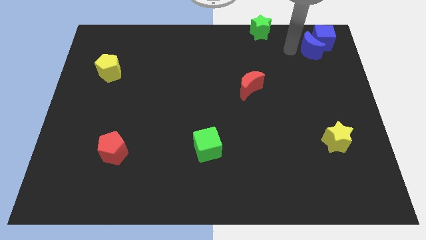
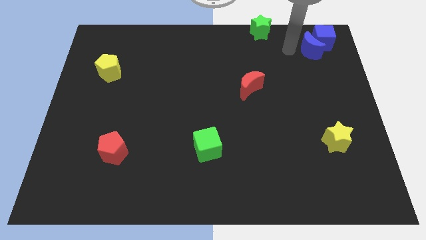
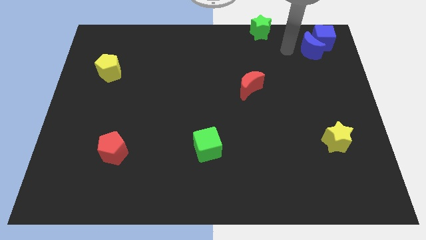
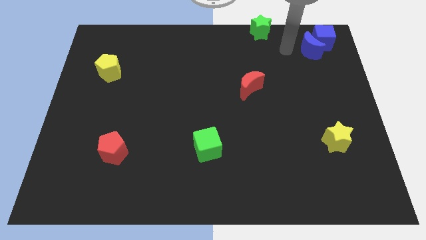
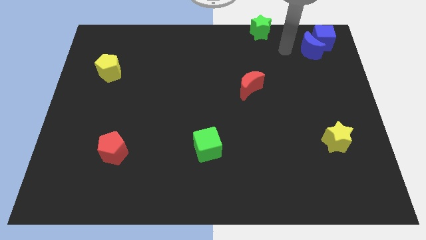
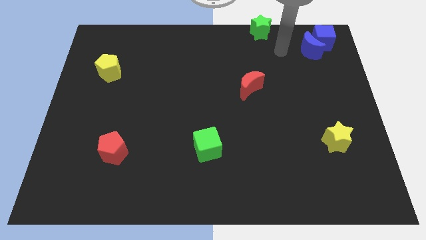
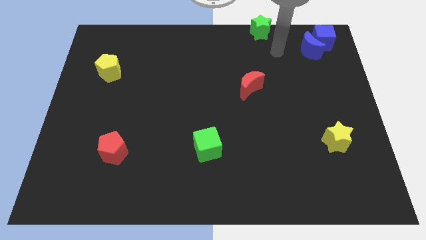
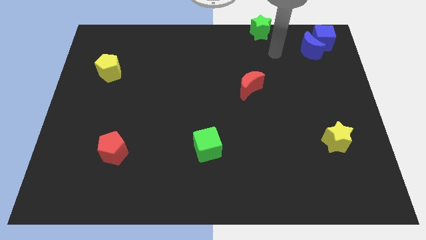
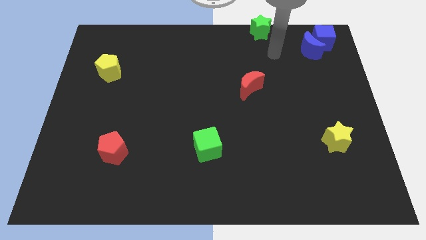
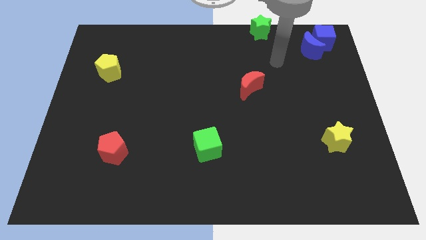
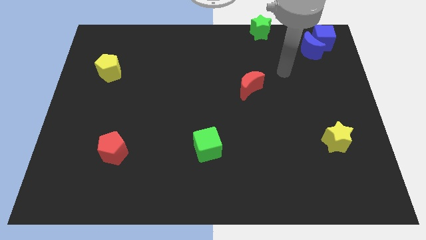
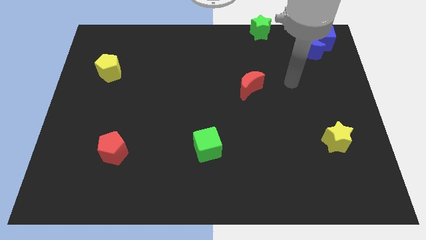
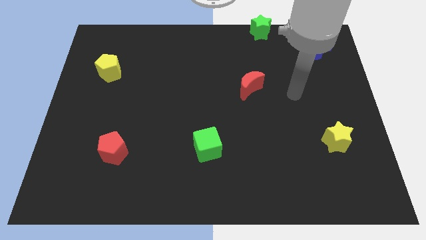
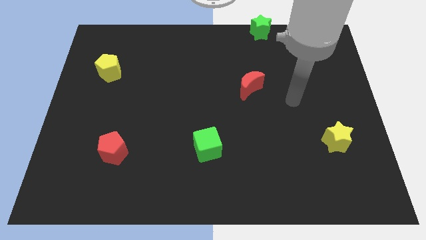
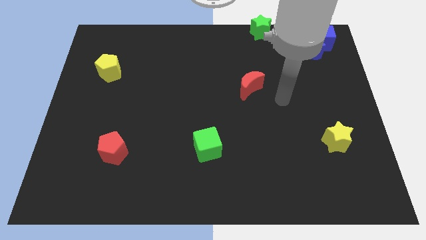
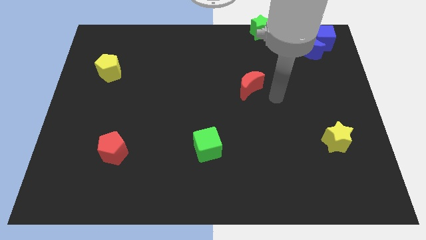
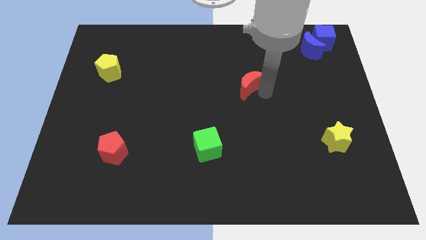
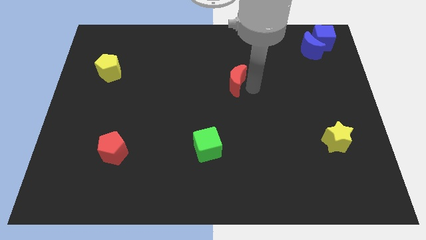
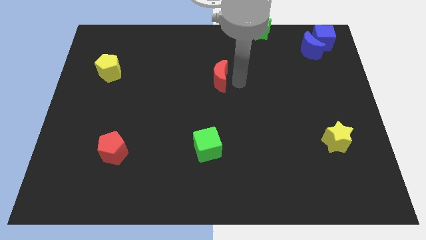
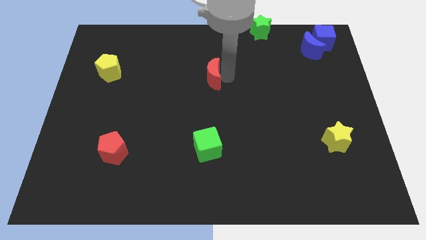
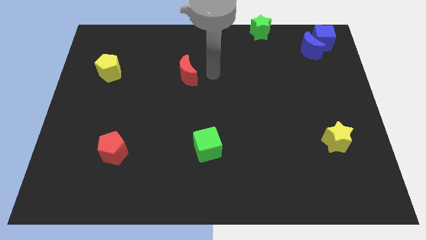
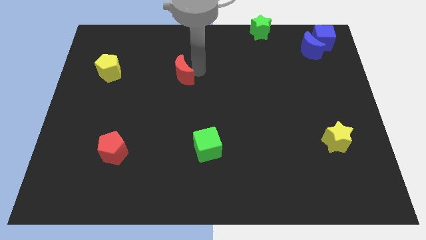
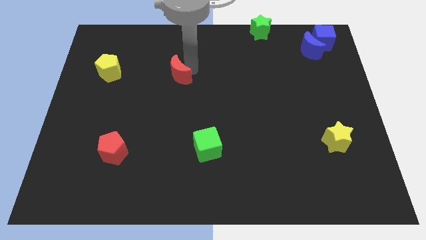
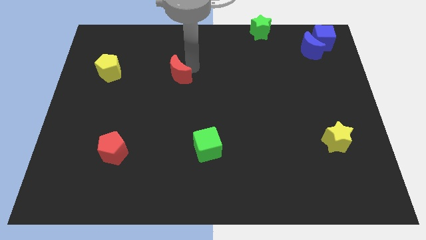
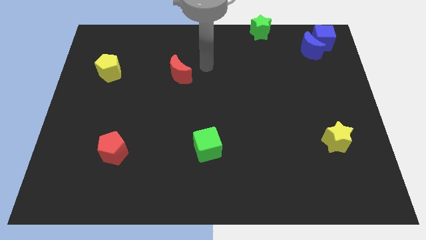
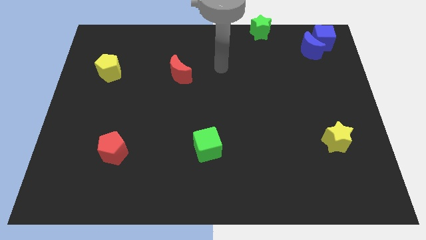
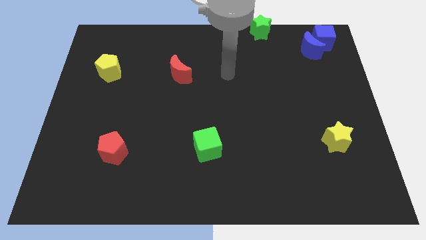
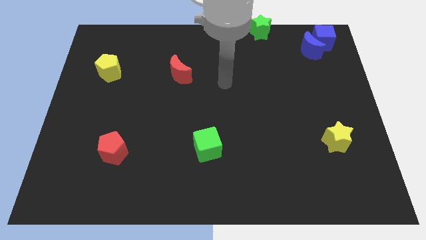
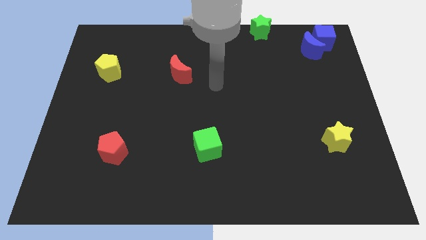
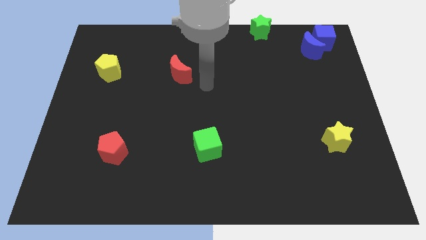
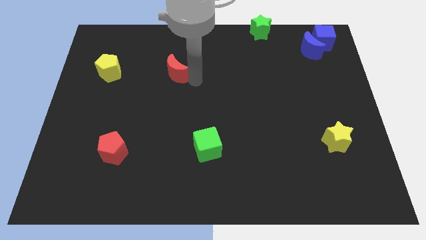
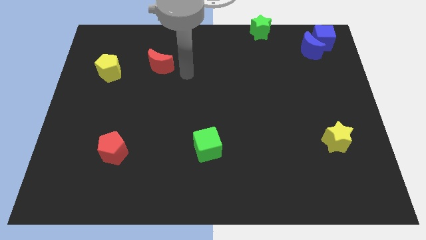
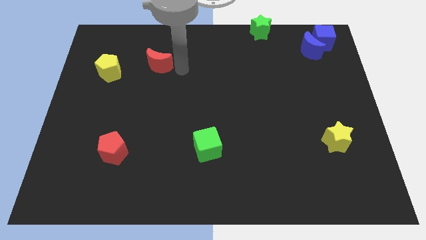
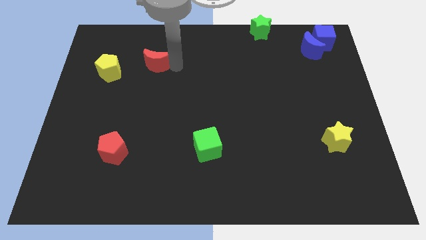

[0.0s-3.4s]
push the red crescent to the right of the yellow pentagon

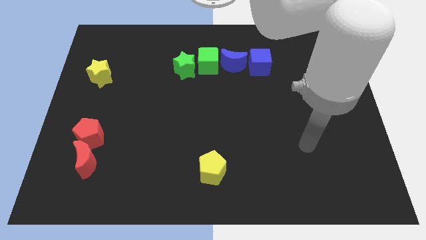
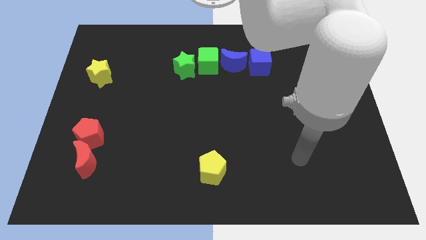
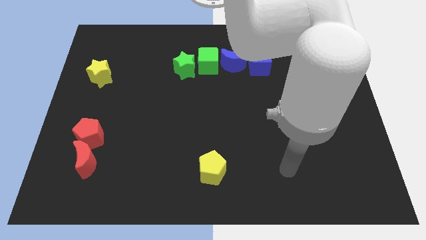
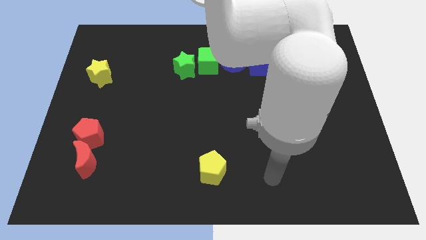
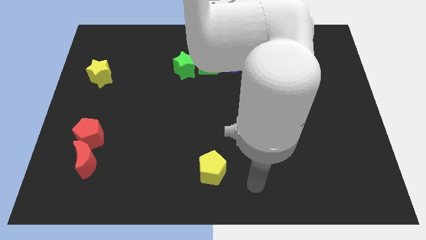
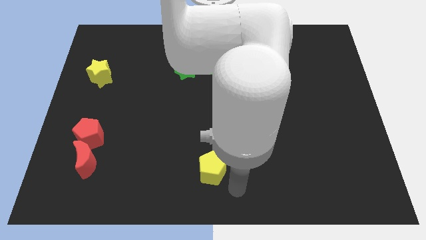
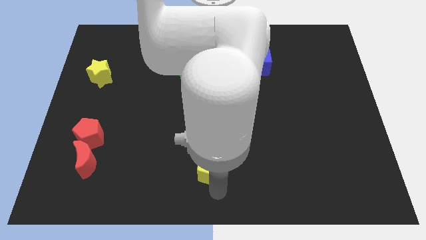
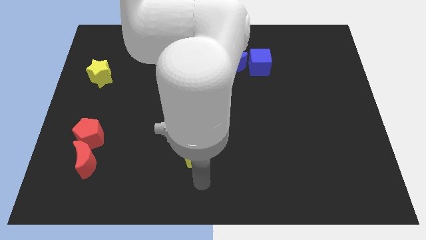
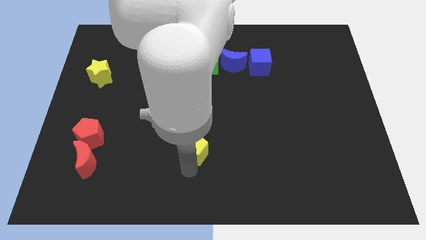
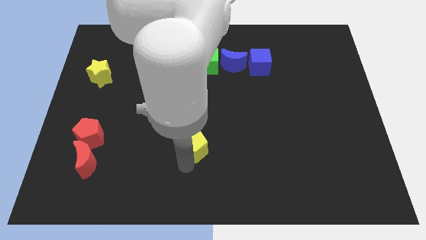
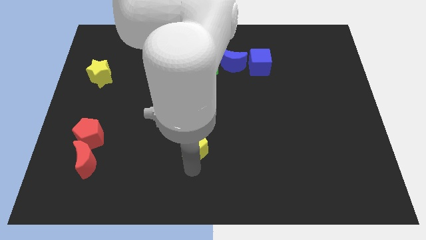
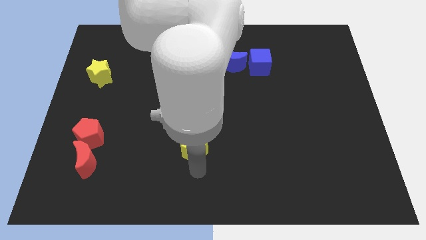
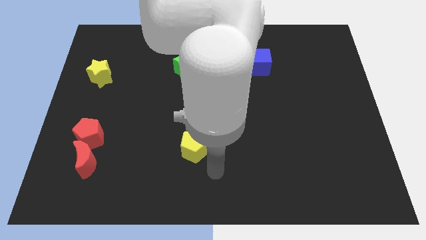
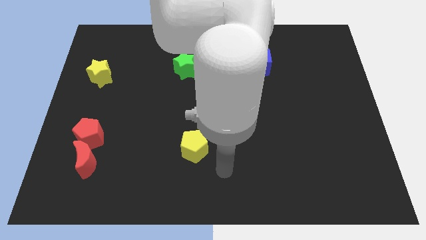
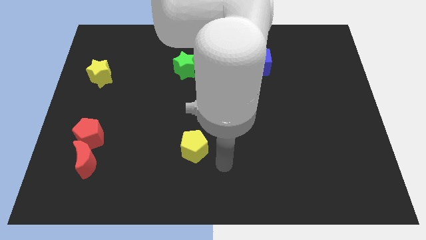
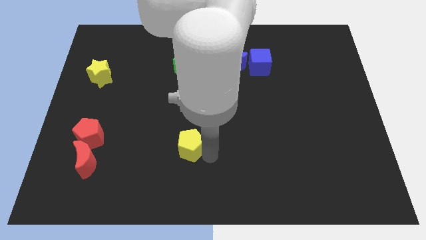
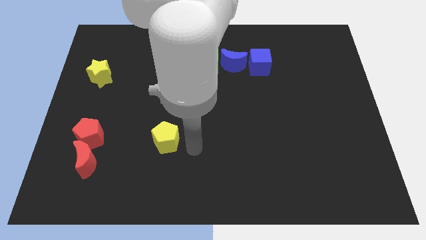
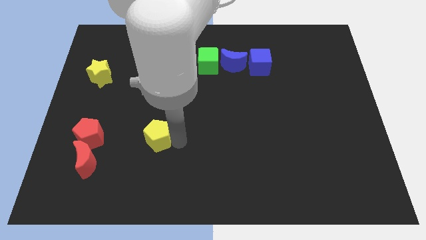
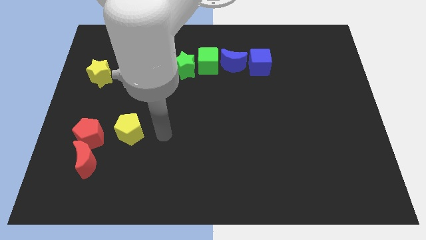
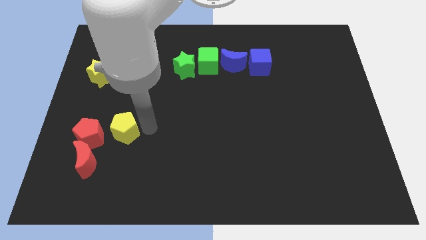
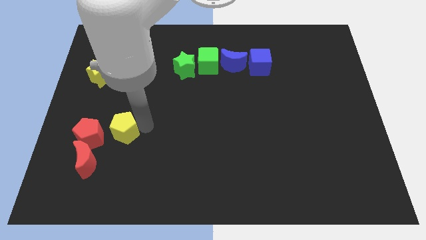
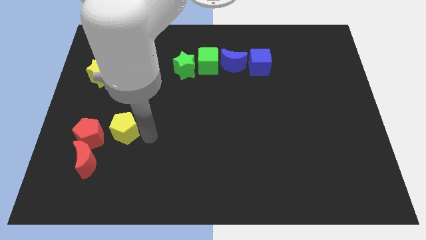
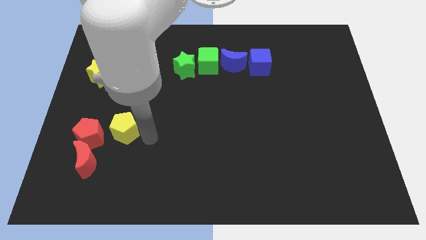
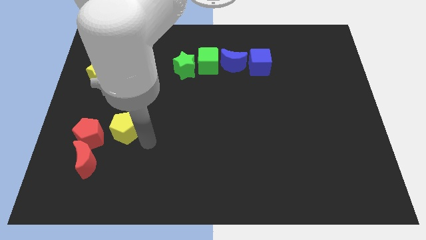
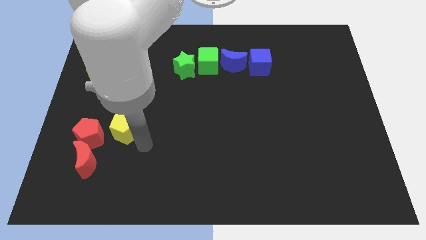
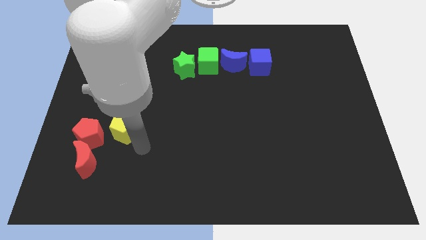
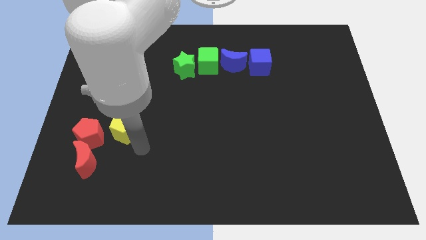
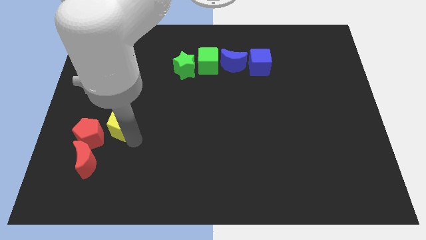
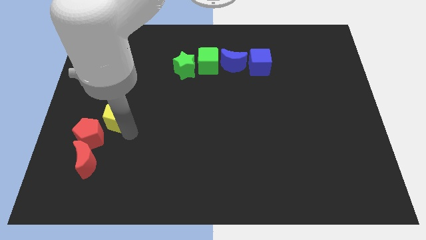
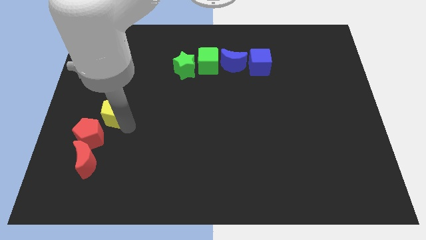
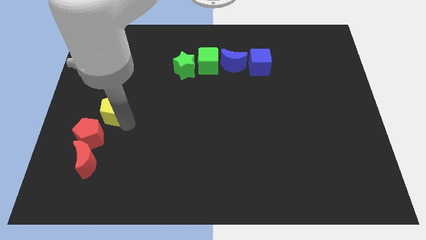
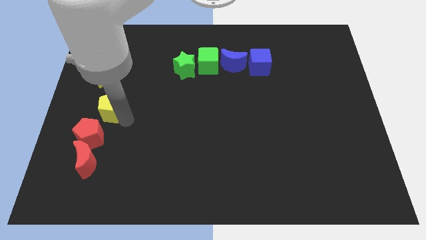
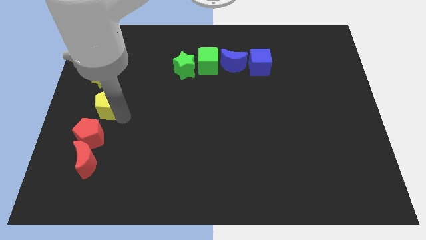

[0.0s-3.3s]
place the yellow pentagon to the top right of the red pentagon

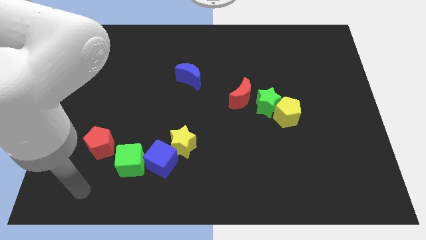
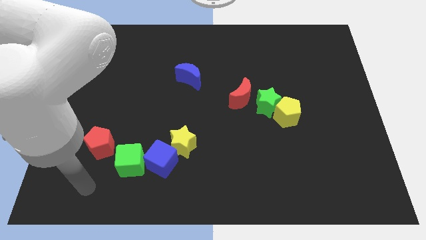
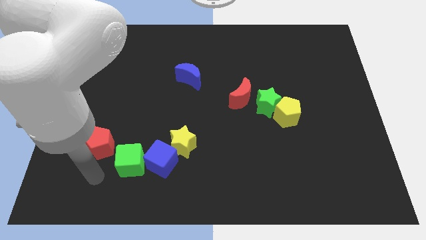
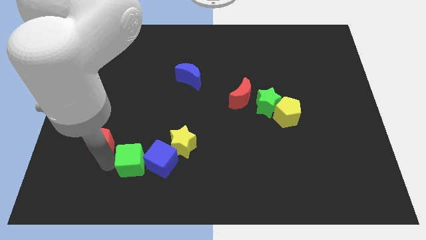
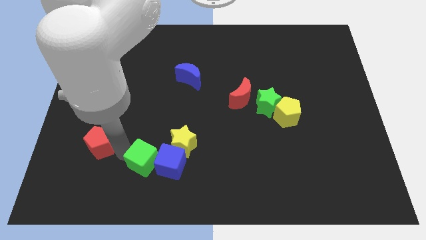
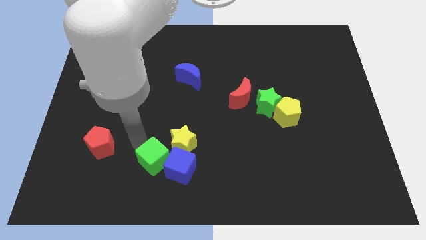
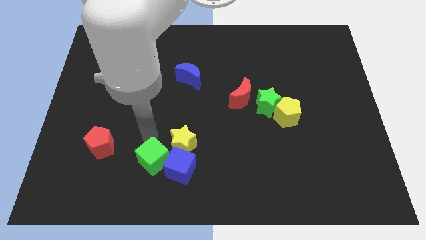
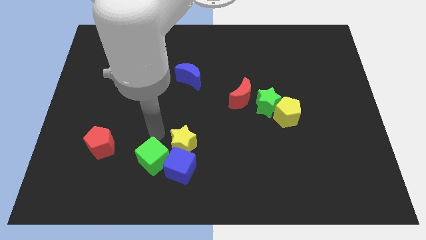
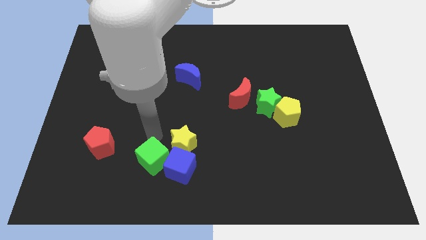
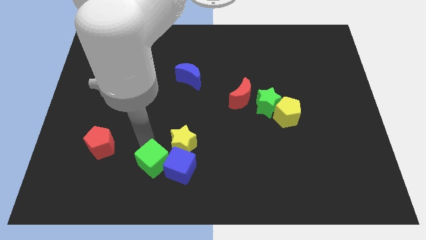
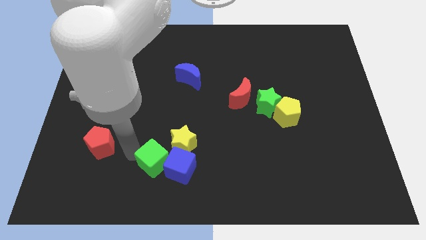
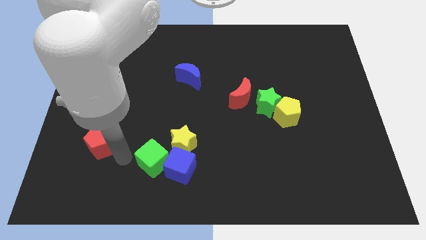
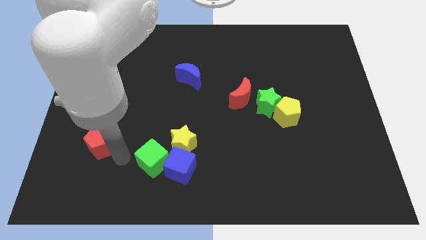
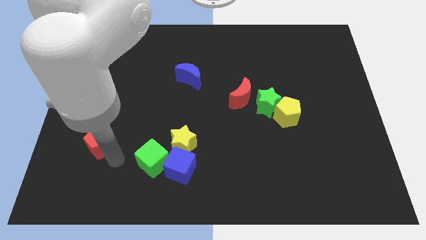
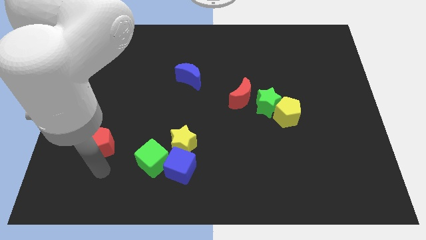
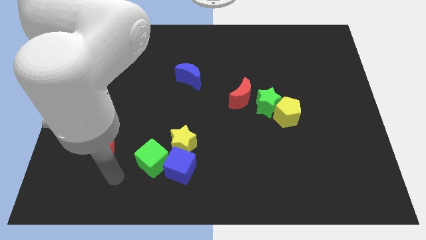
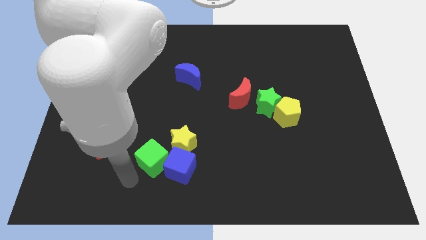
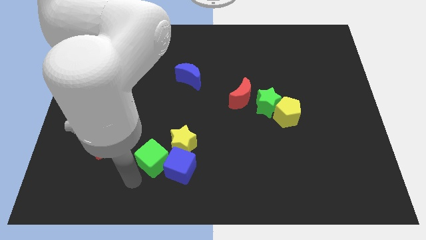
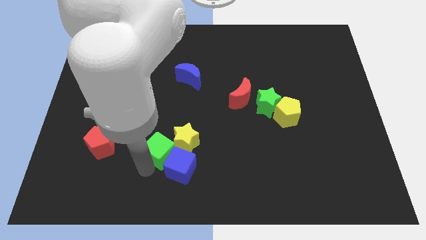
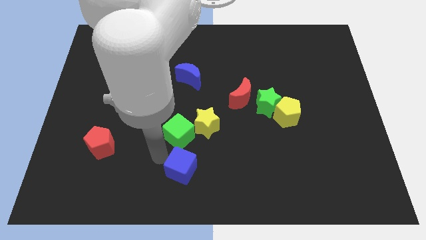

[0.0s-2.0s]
place green cube above the blue cube

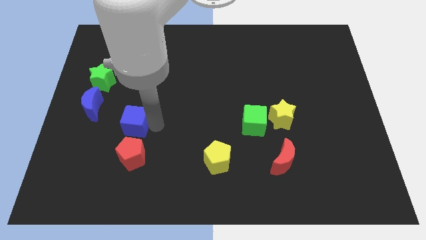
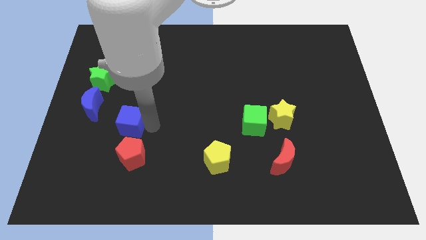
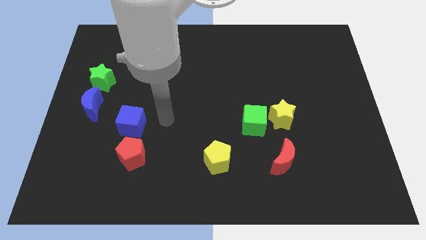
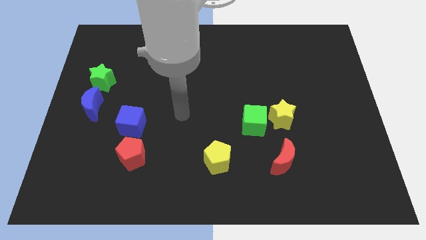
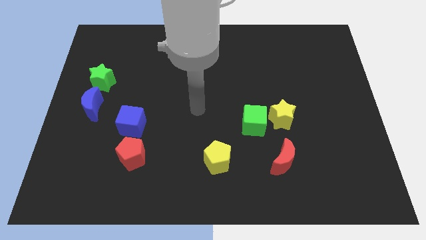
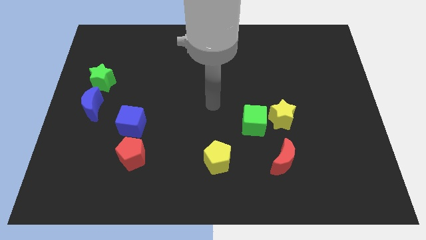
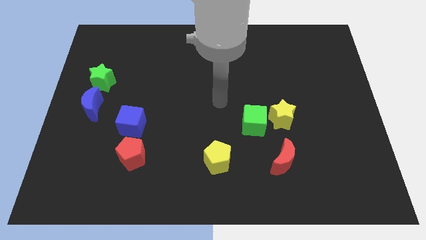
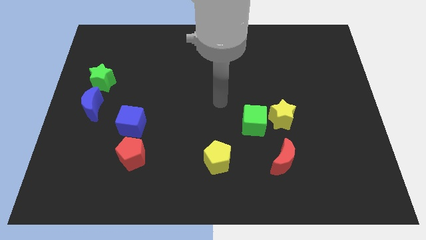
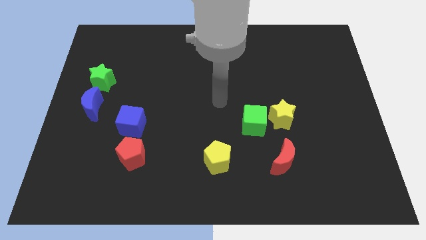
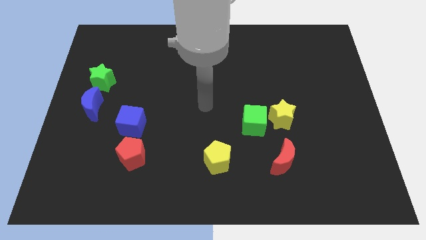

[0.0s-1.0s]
move your arm away from the blue cube
